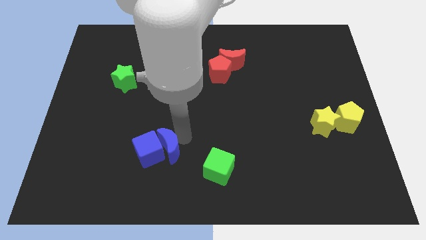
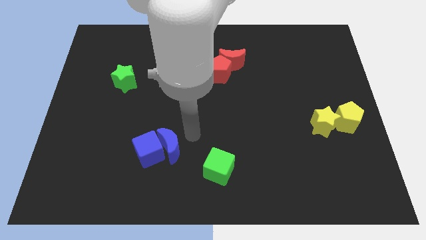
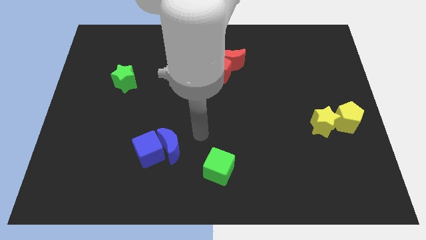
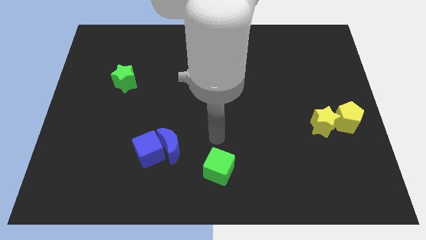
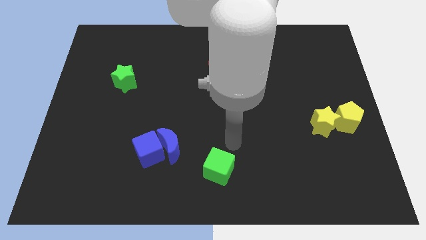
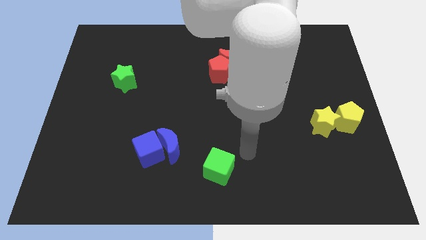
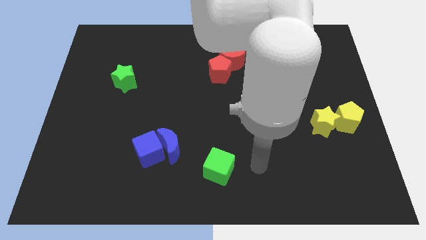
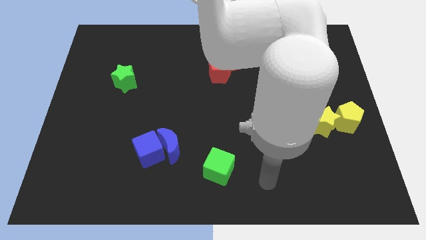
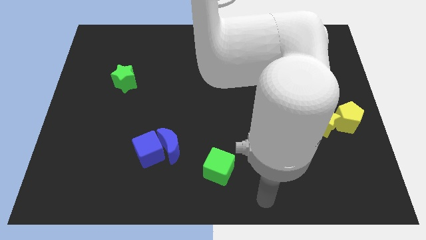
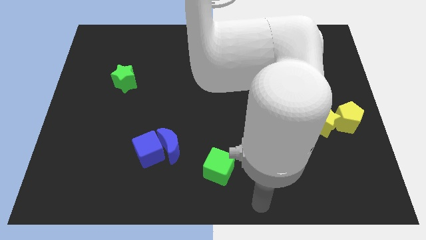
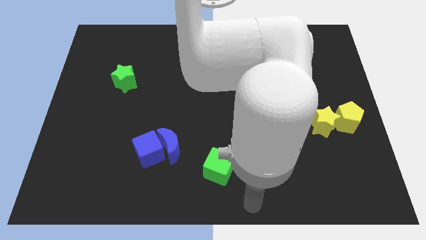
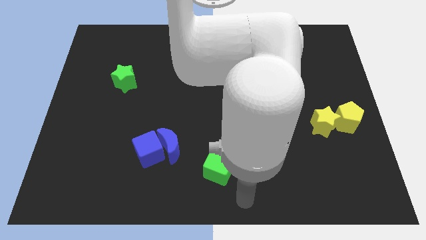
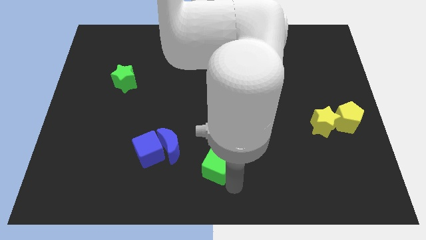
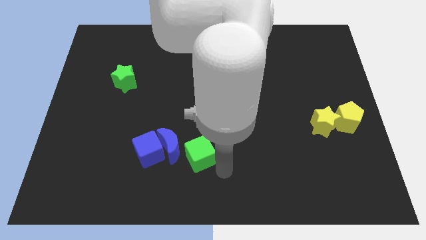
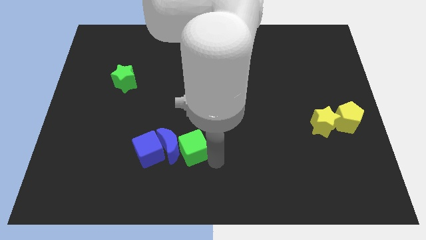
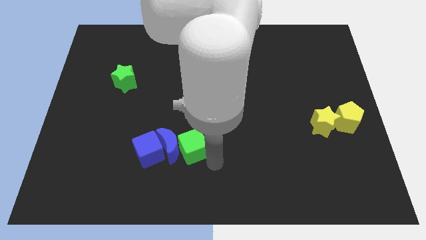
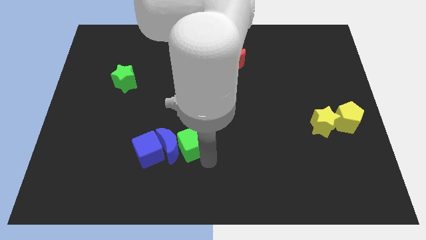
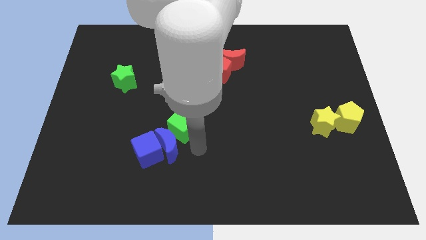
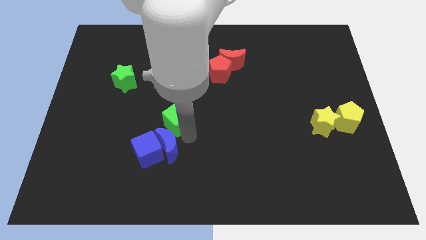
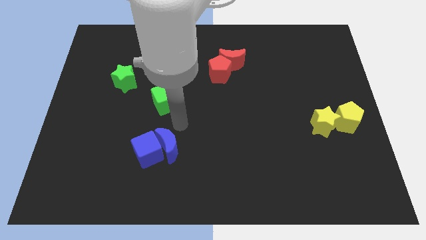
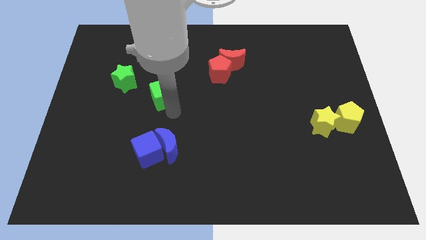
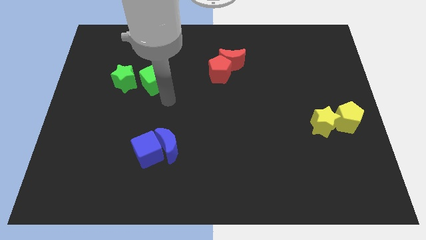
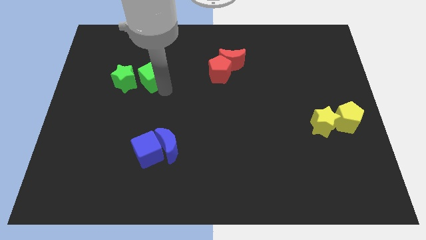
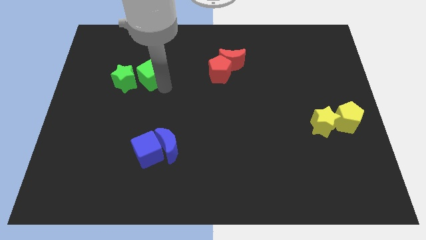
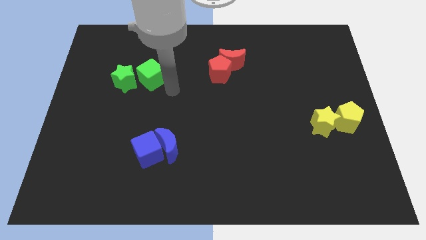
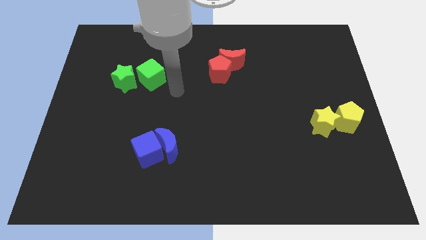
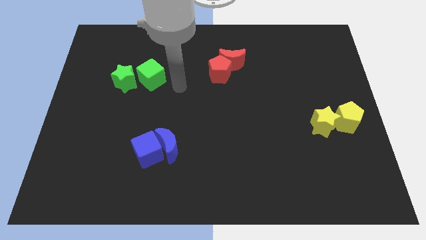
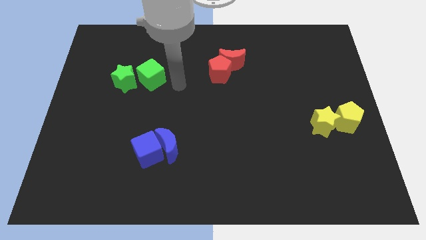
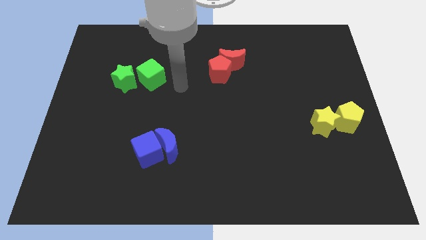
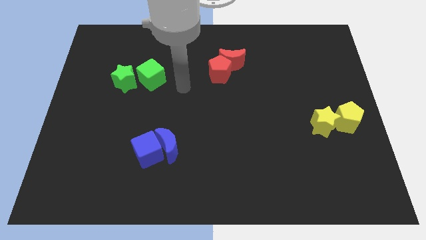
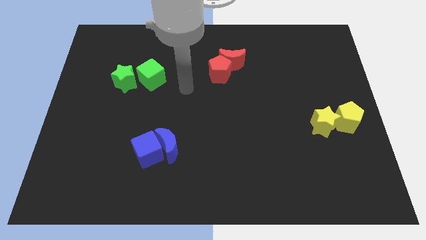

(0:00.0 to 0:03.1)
put the green cube parallel right to the green star

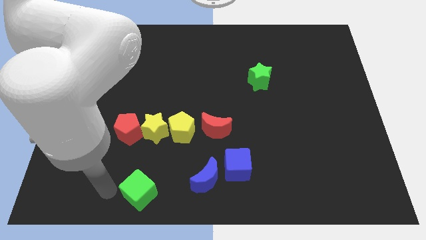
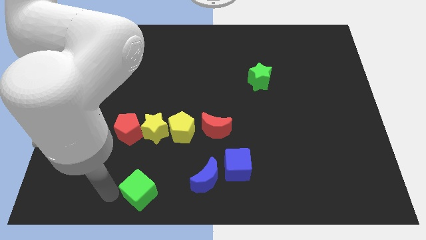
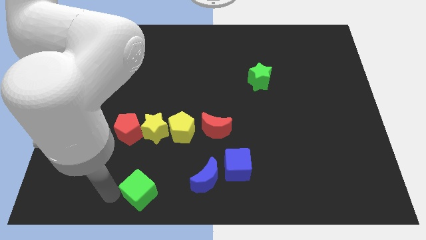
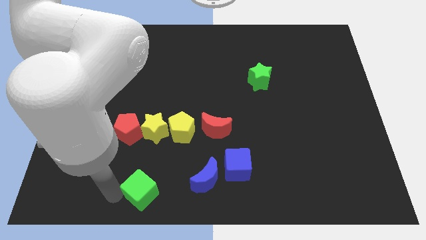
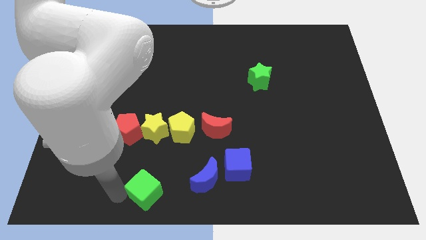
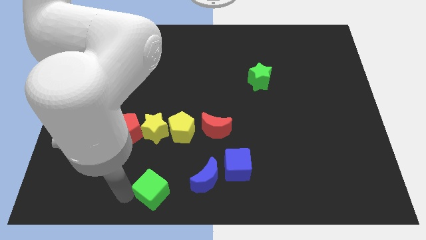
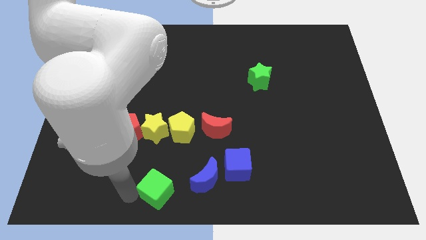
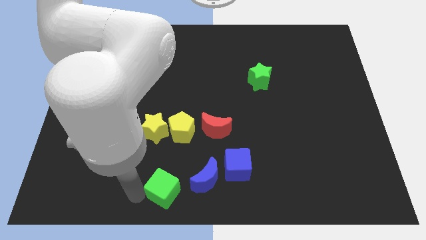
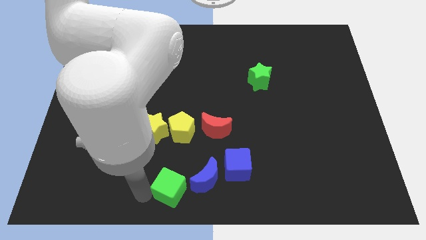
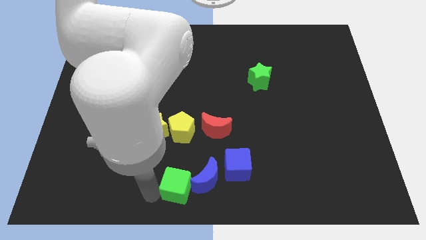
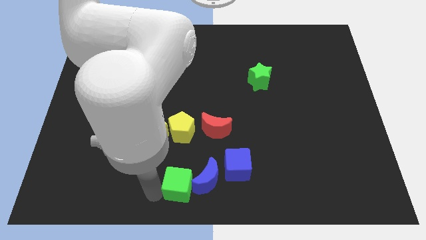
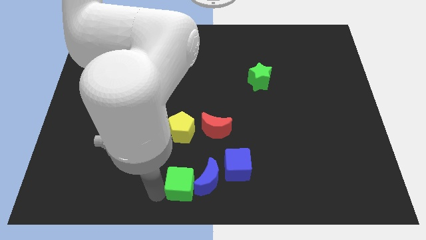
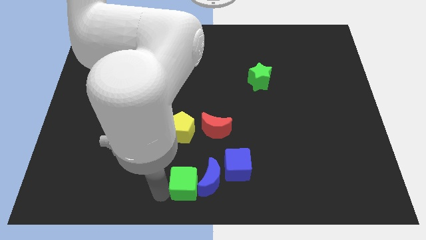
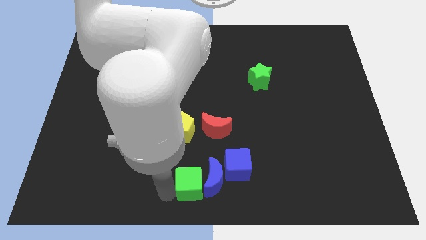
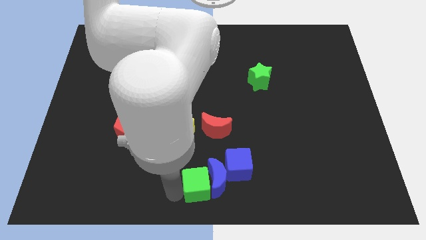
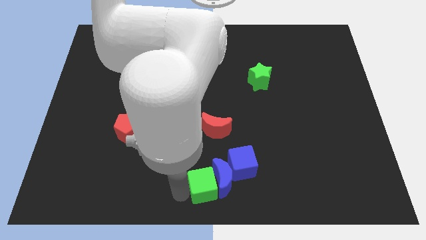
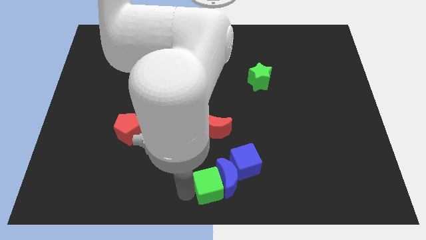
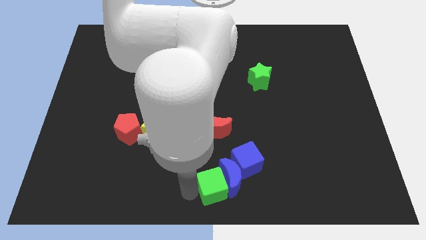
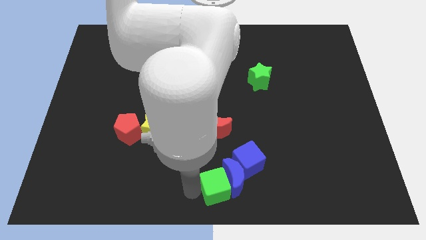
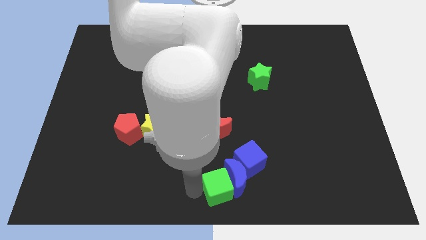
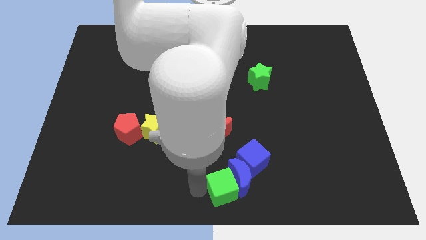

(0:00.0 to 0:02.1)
slide green cube close to blue moon

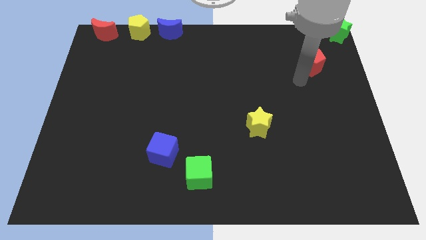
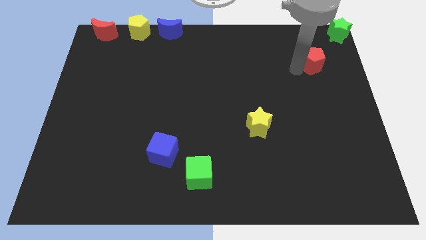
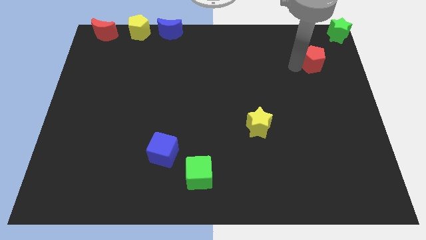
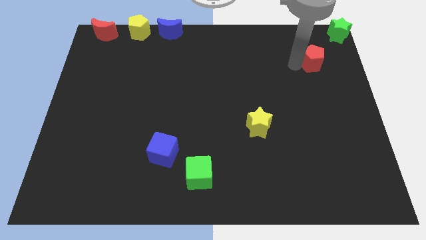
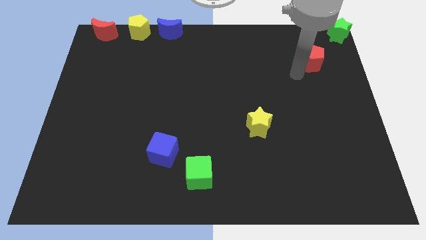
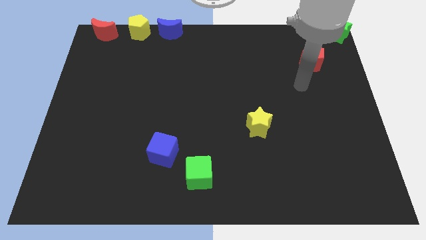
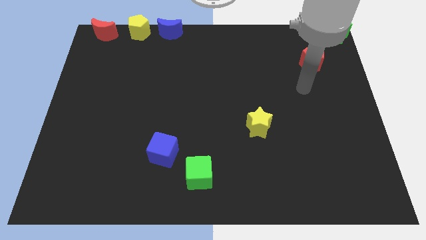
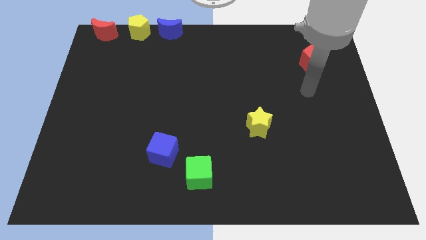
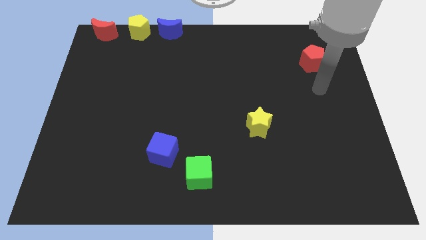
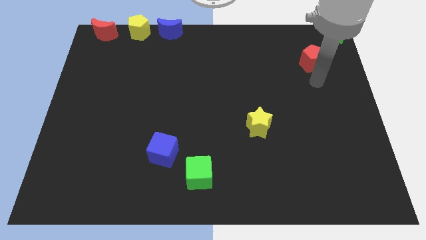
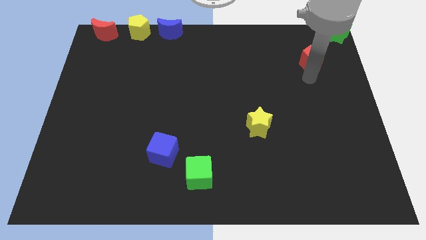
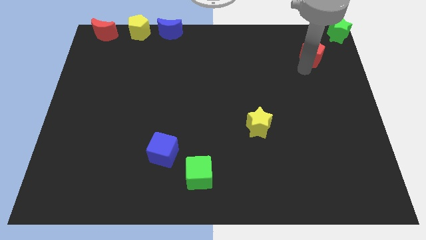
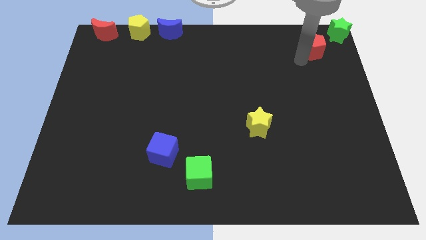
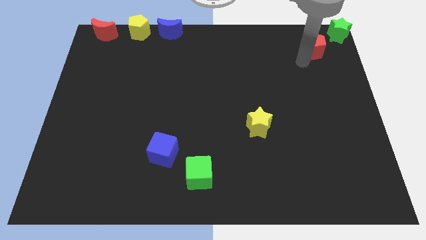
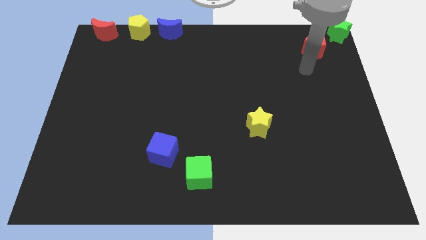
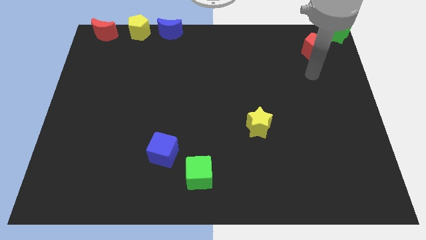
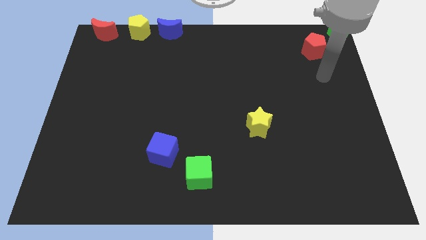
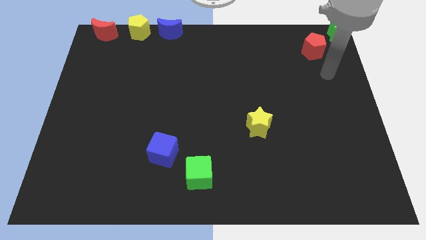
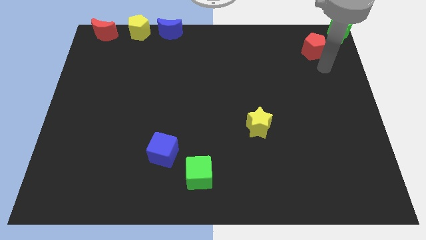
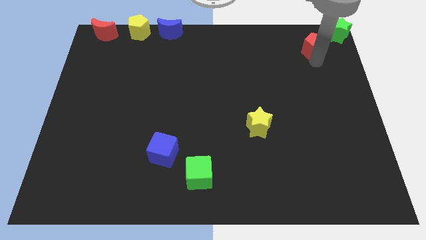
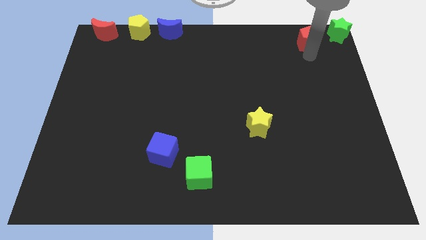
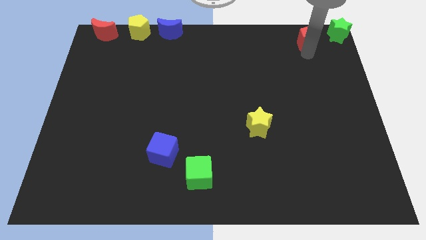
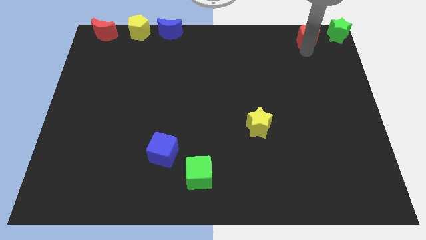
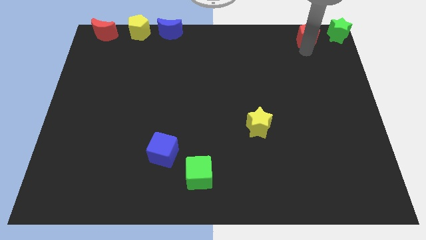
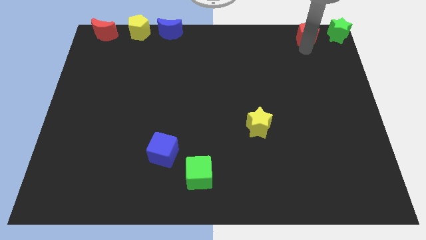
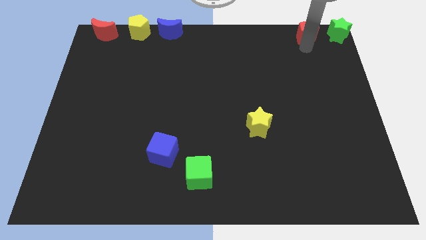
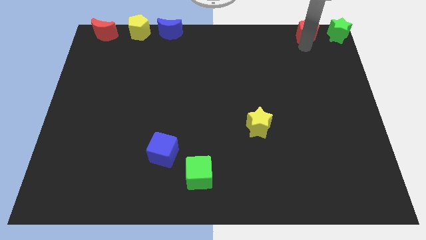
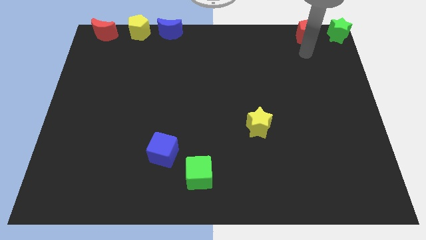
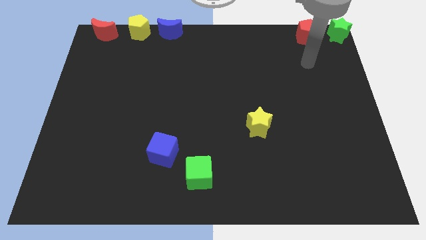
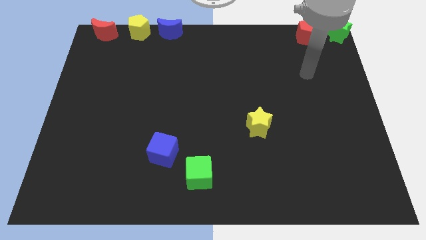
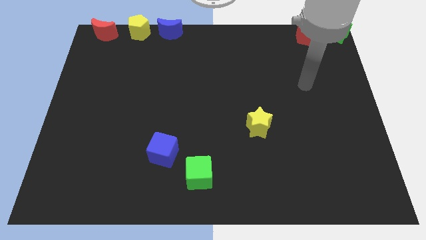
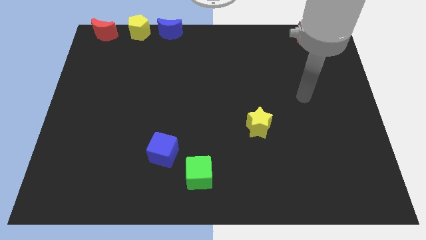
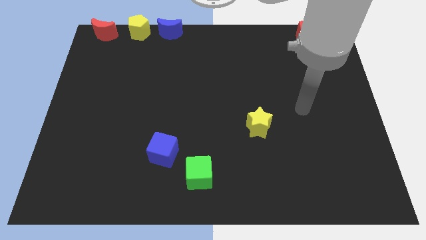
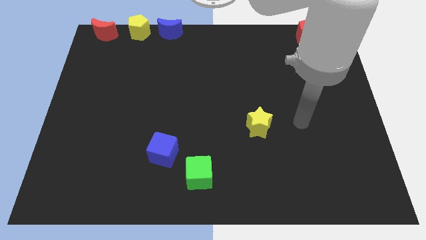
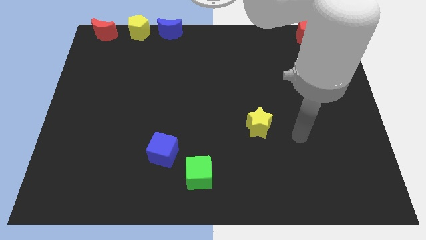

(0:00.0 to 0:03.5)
push the red pentagon to the left side of the green star

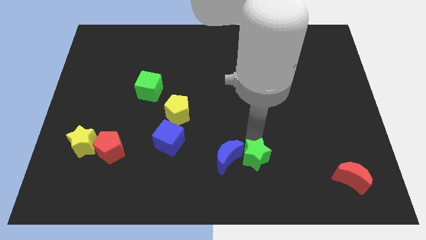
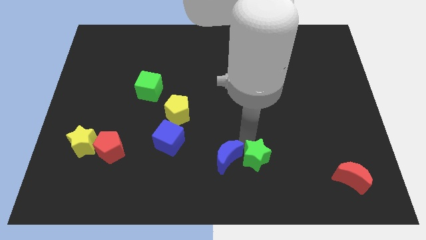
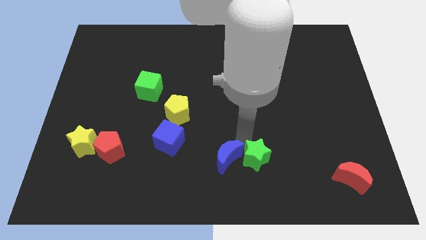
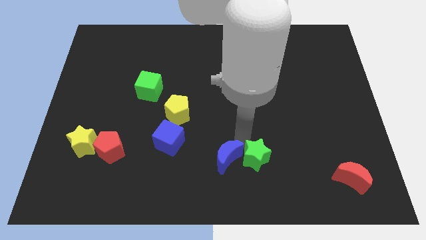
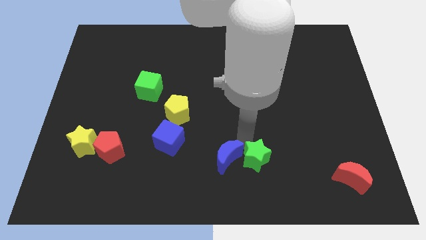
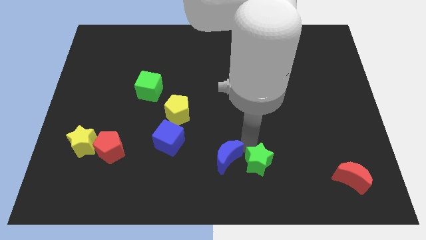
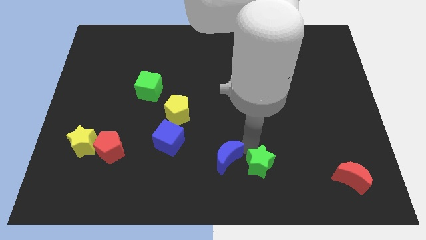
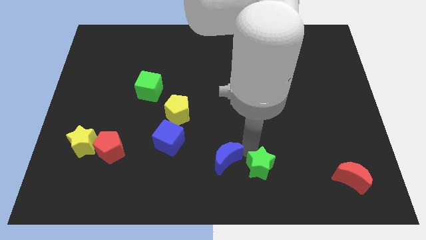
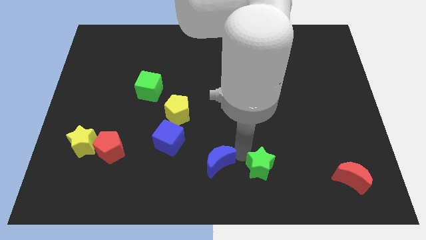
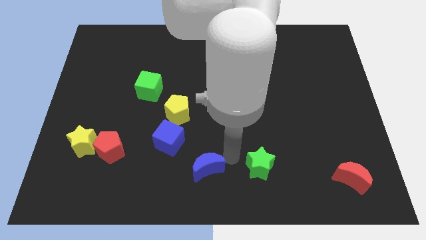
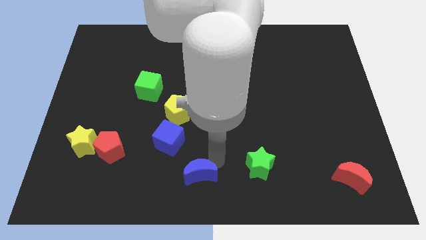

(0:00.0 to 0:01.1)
separate blue moon from green star
